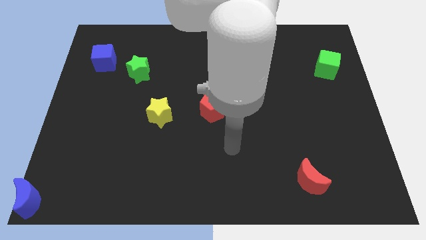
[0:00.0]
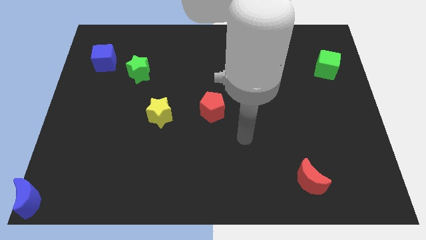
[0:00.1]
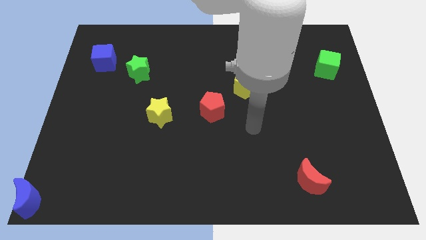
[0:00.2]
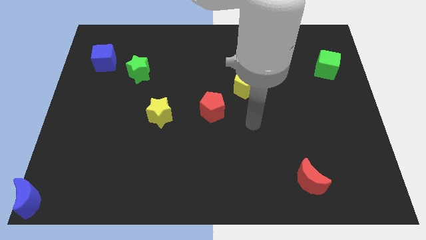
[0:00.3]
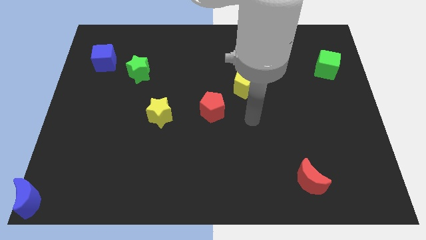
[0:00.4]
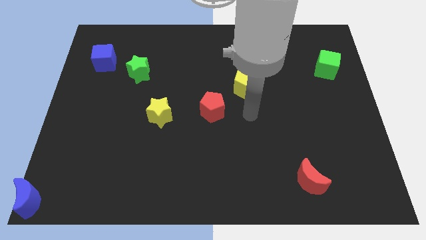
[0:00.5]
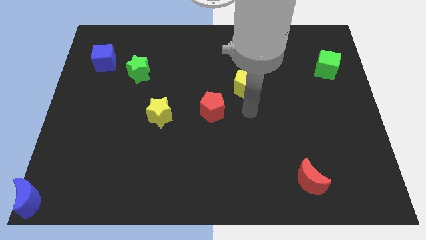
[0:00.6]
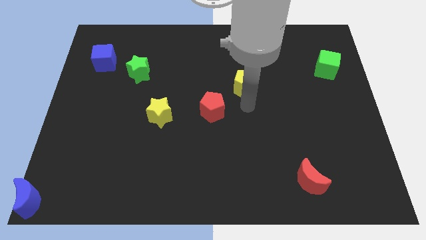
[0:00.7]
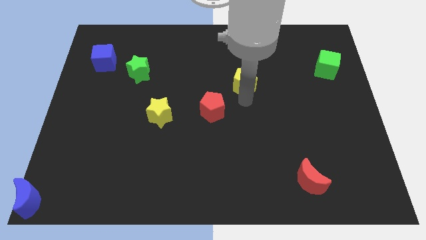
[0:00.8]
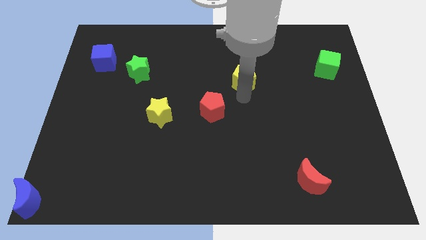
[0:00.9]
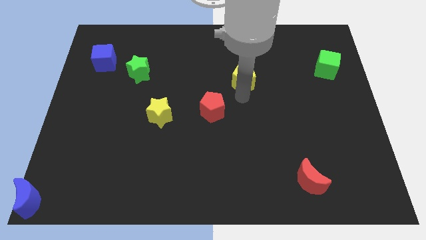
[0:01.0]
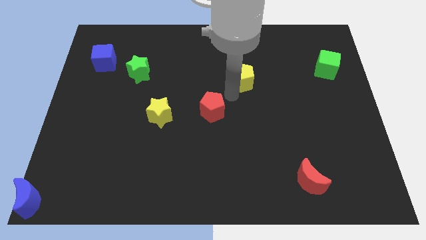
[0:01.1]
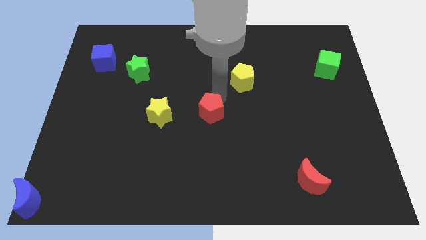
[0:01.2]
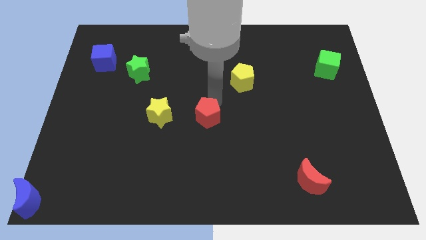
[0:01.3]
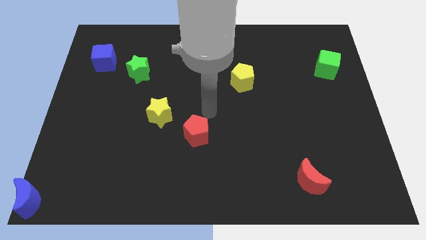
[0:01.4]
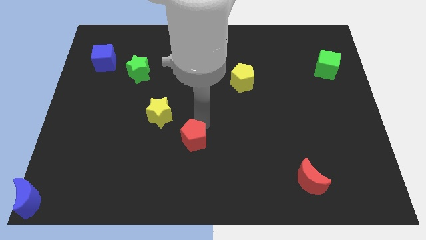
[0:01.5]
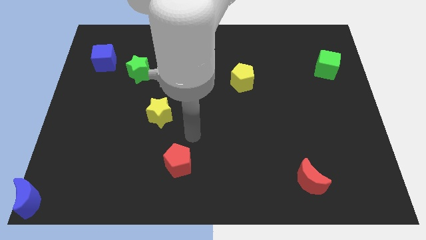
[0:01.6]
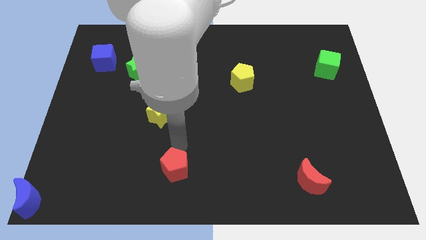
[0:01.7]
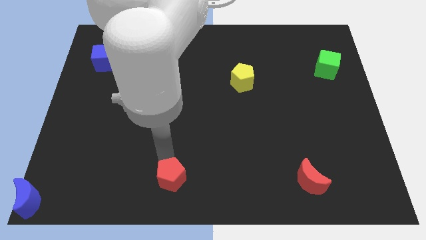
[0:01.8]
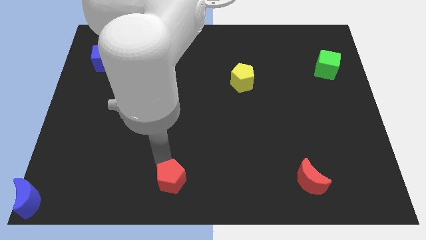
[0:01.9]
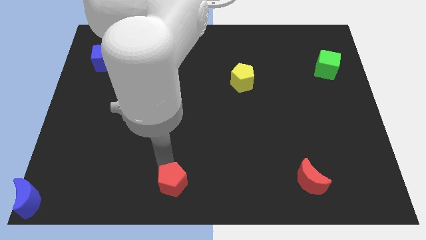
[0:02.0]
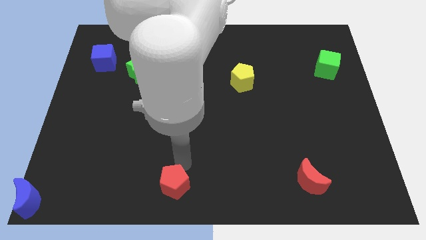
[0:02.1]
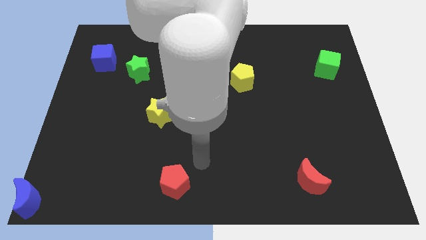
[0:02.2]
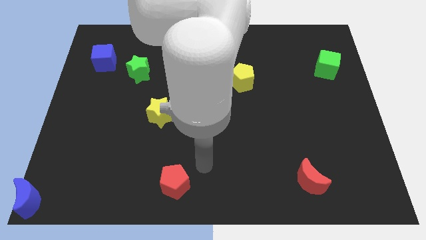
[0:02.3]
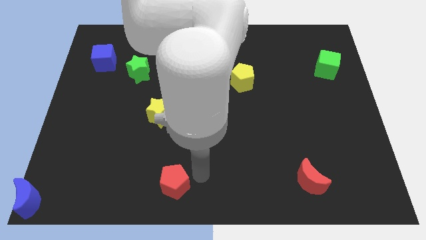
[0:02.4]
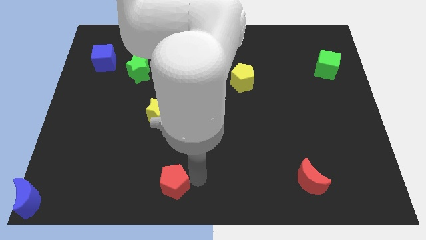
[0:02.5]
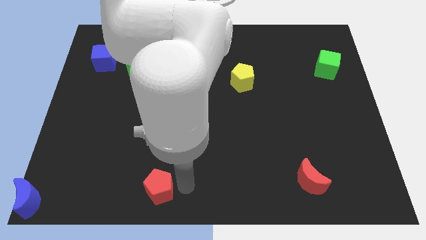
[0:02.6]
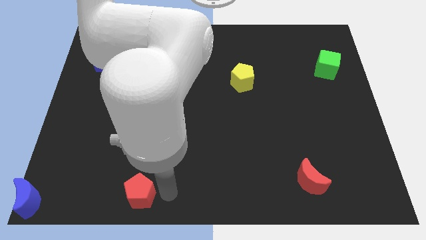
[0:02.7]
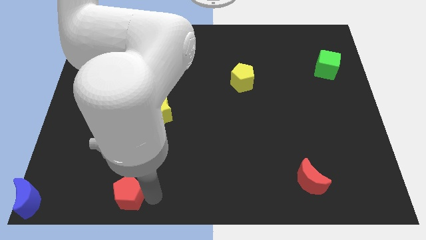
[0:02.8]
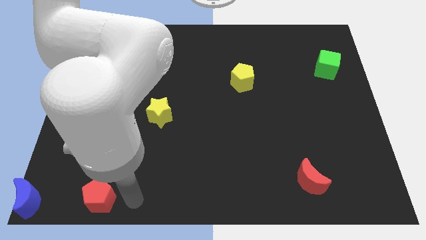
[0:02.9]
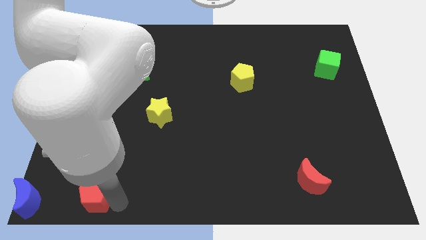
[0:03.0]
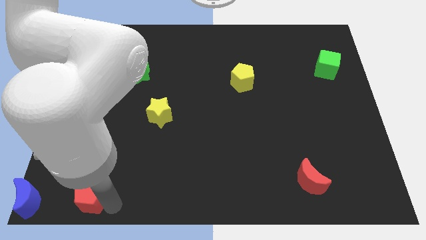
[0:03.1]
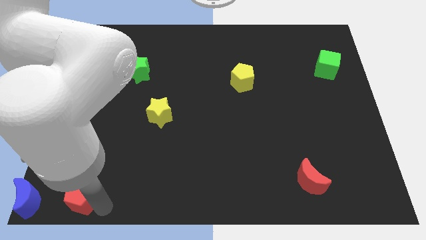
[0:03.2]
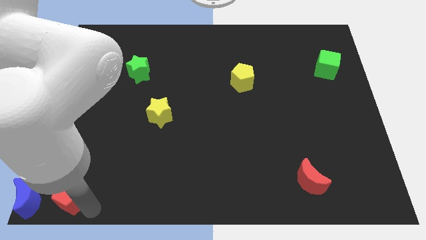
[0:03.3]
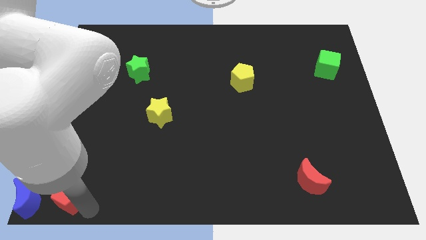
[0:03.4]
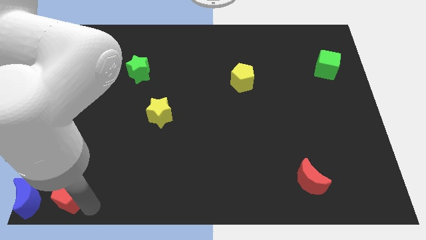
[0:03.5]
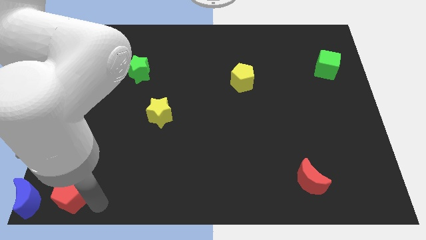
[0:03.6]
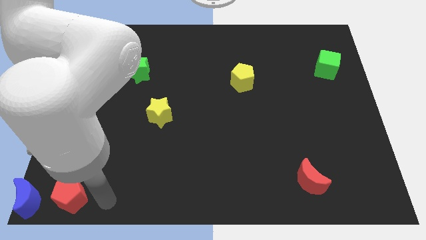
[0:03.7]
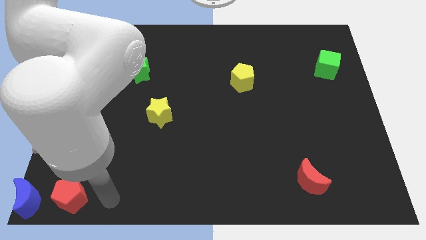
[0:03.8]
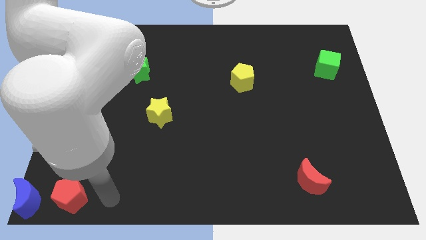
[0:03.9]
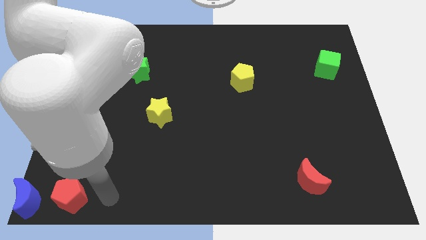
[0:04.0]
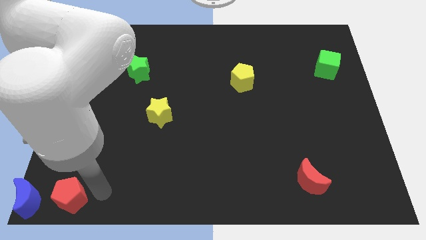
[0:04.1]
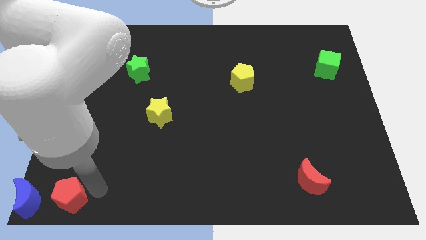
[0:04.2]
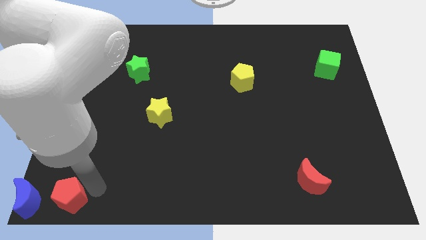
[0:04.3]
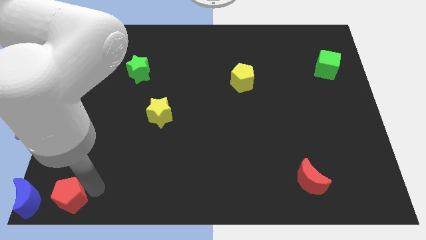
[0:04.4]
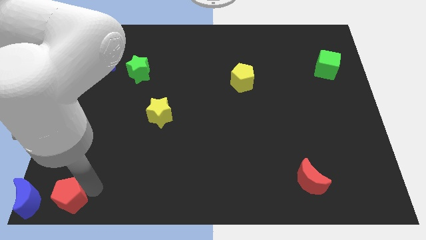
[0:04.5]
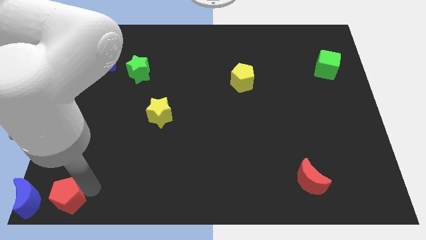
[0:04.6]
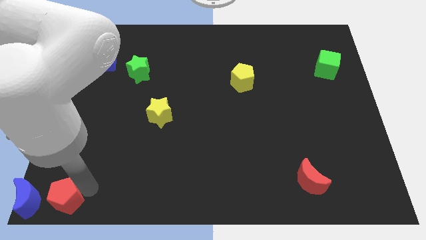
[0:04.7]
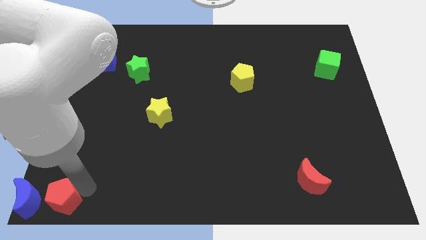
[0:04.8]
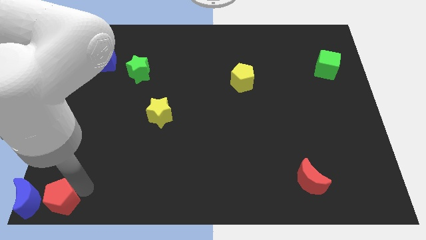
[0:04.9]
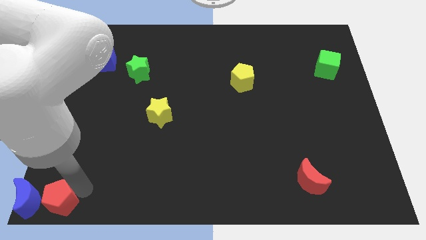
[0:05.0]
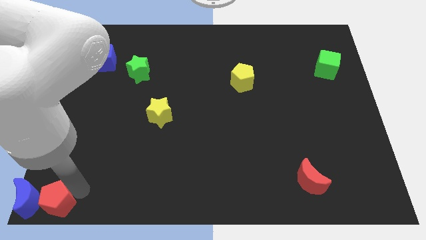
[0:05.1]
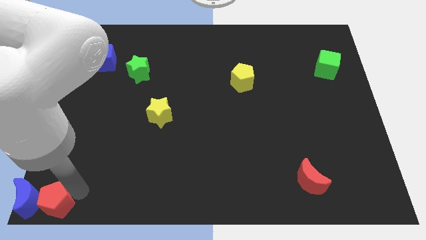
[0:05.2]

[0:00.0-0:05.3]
place the red pentagon right to the blue moon

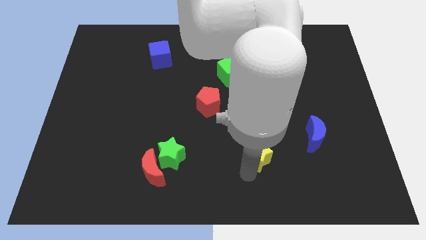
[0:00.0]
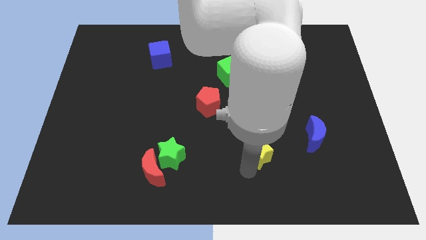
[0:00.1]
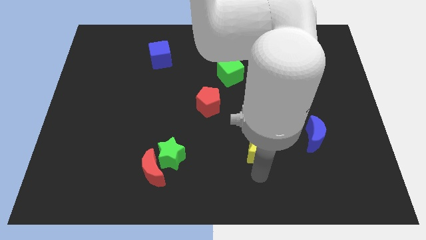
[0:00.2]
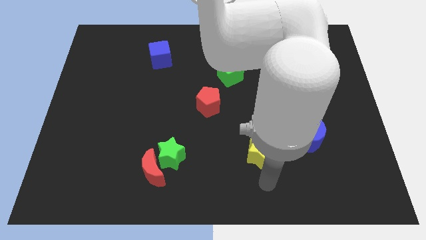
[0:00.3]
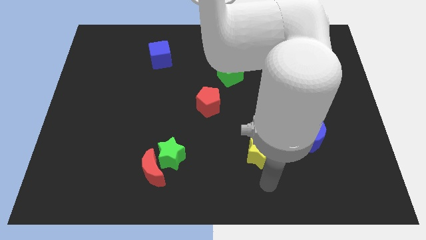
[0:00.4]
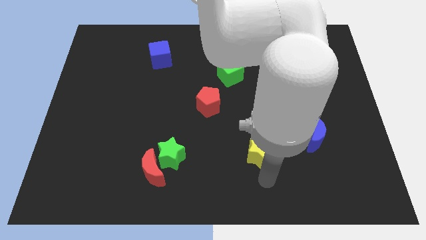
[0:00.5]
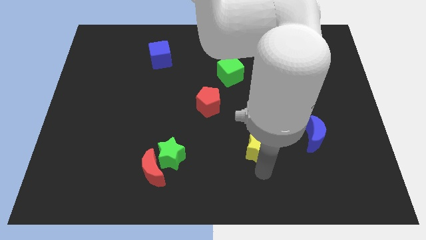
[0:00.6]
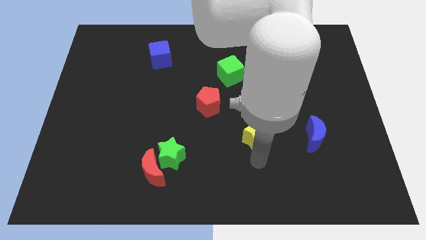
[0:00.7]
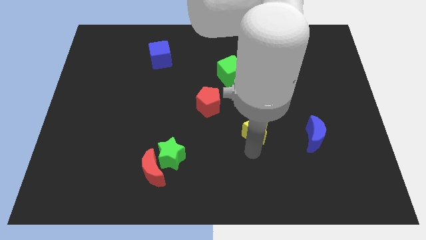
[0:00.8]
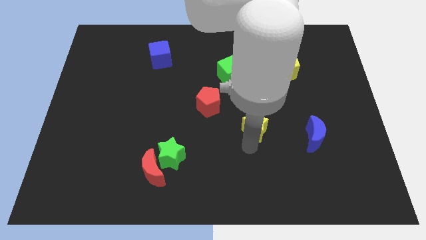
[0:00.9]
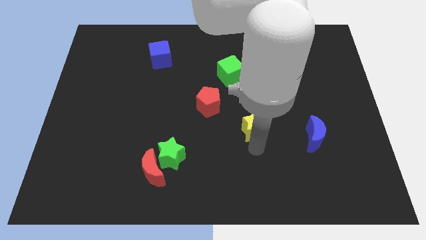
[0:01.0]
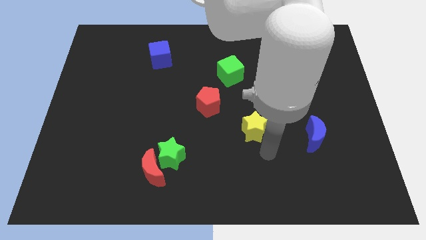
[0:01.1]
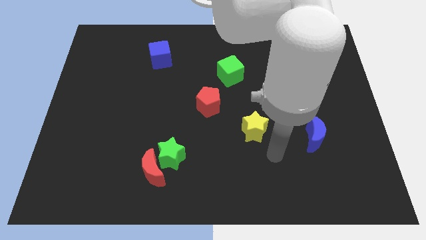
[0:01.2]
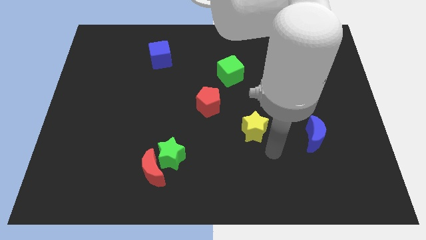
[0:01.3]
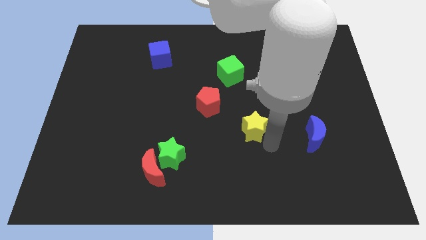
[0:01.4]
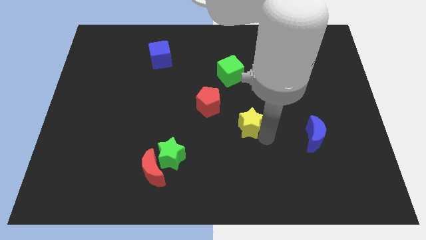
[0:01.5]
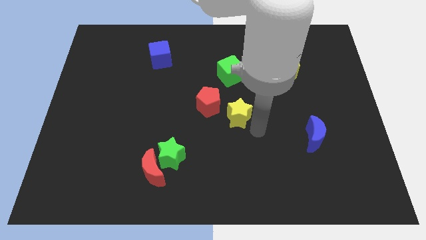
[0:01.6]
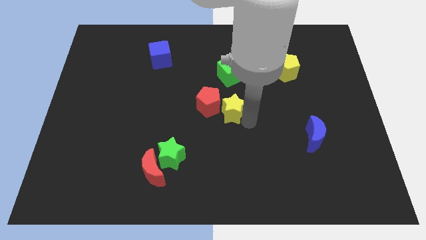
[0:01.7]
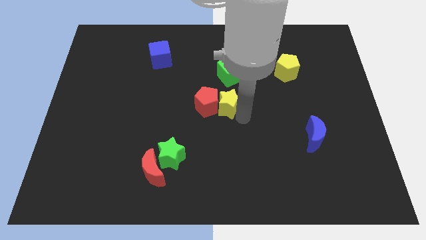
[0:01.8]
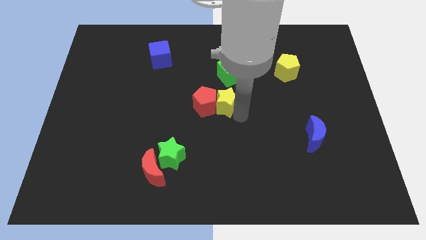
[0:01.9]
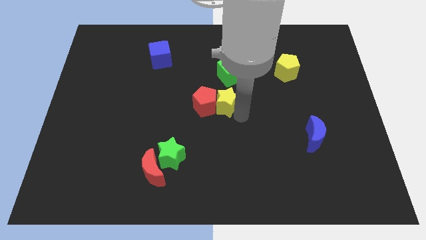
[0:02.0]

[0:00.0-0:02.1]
push yellow star to the right of red pentagon

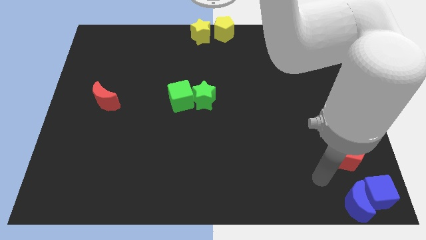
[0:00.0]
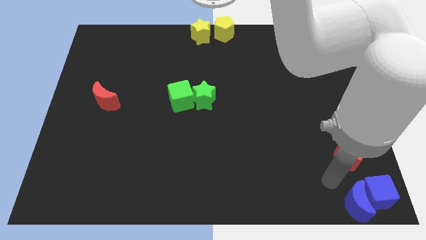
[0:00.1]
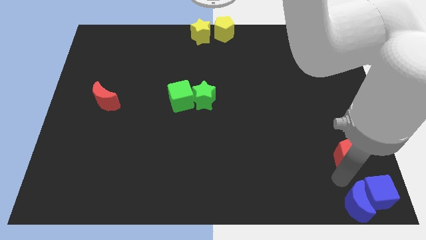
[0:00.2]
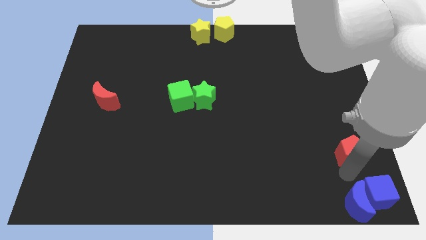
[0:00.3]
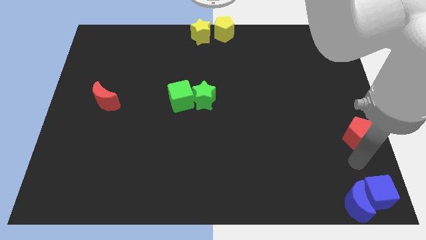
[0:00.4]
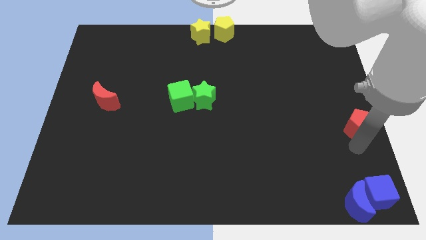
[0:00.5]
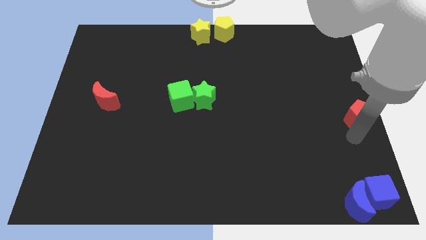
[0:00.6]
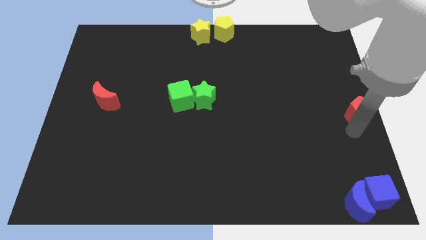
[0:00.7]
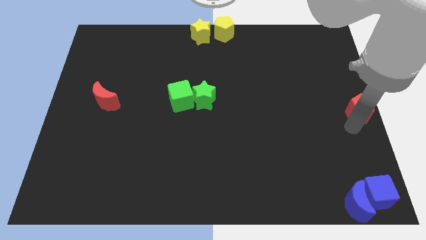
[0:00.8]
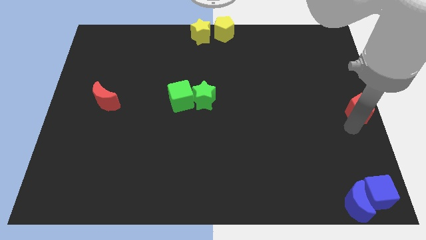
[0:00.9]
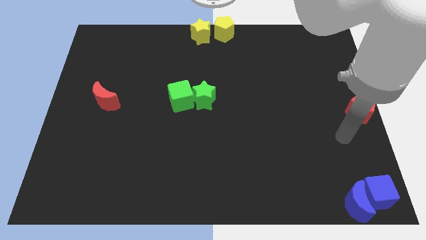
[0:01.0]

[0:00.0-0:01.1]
place the red pentagon to the middle right

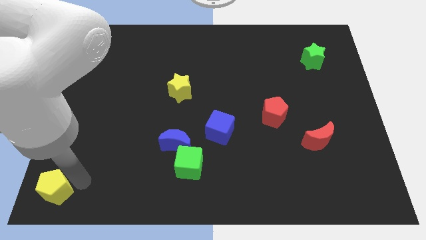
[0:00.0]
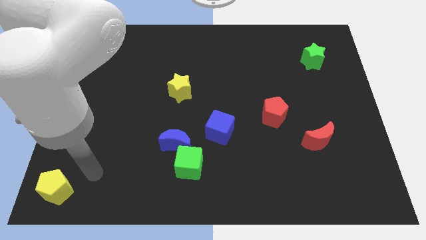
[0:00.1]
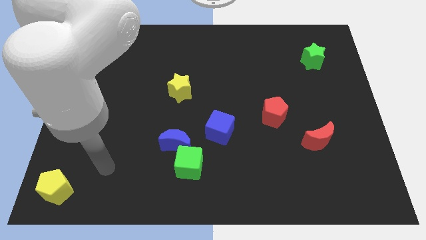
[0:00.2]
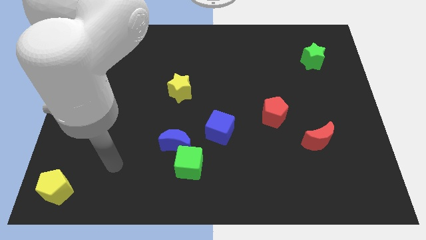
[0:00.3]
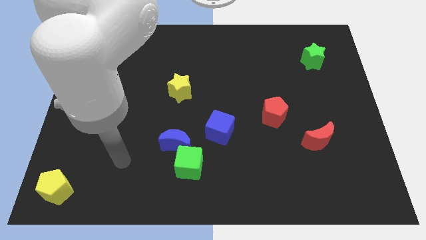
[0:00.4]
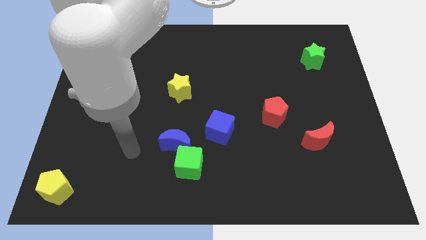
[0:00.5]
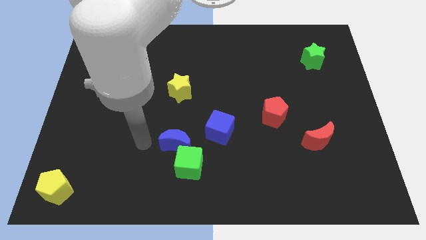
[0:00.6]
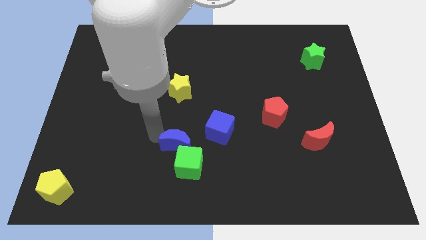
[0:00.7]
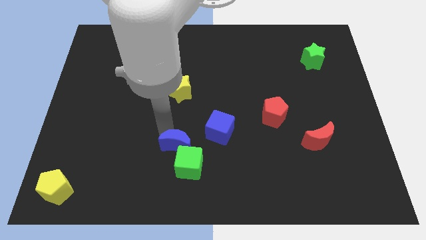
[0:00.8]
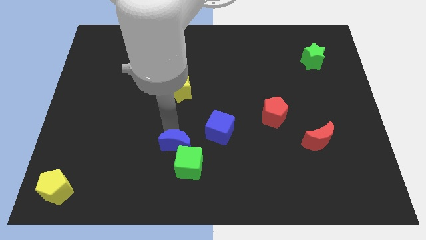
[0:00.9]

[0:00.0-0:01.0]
place your arm to the top of blue moon
